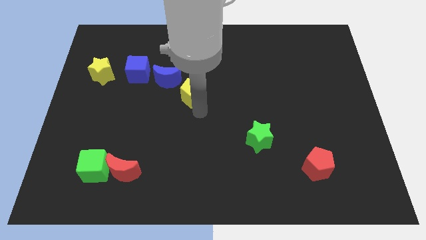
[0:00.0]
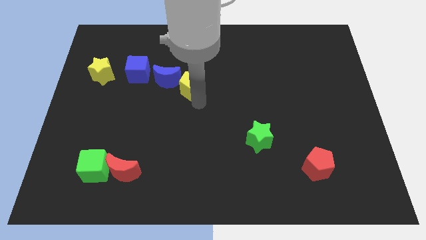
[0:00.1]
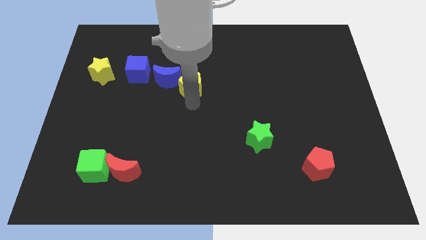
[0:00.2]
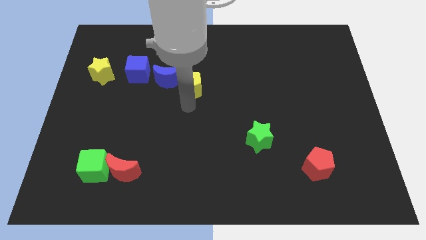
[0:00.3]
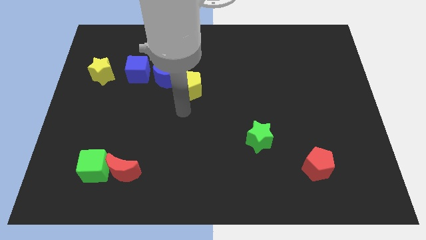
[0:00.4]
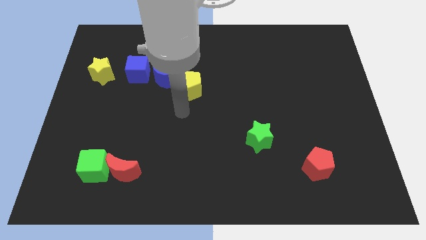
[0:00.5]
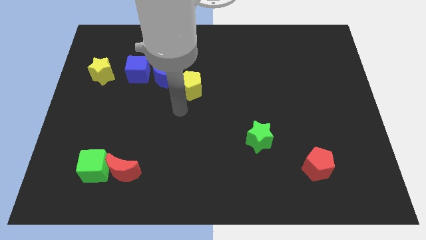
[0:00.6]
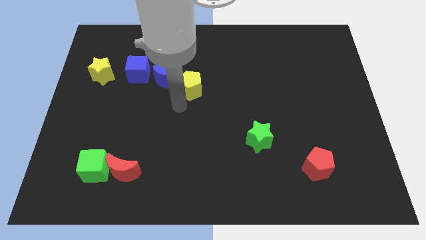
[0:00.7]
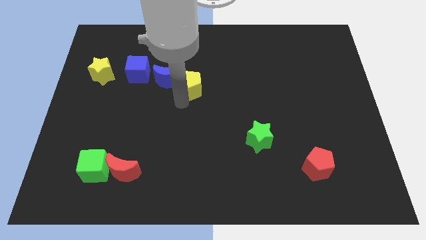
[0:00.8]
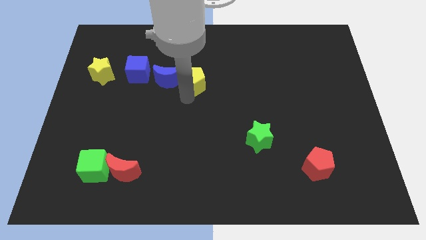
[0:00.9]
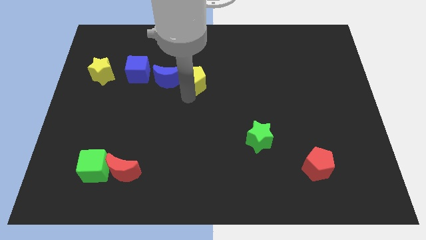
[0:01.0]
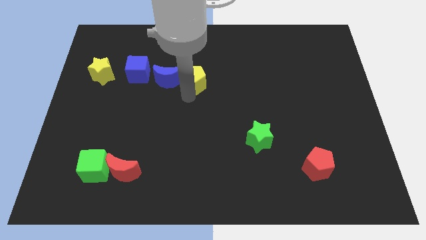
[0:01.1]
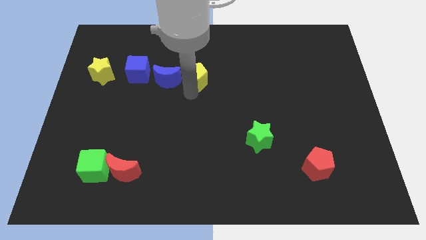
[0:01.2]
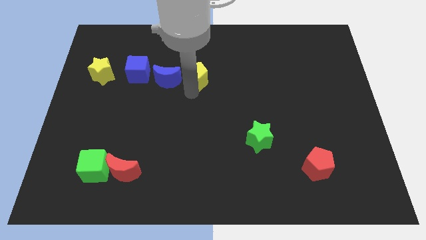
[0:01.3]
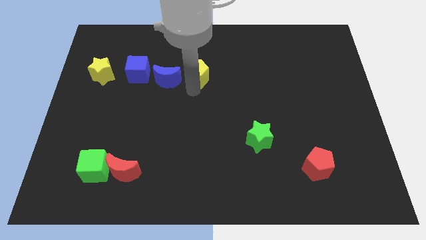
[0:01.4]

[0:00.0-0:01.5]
move the yellow pentagon to the right side of the blue crescent

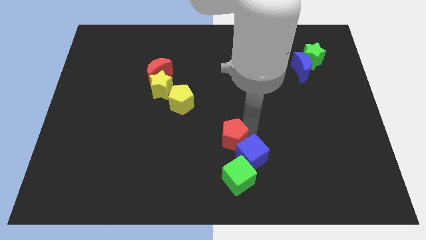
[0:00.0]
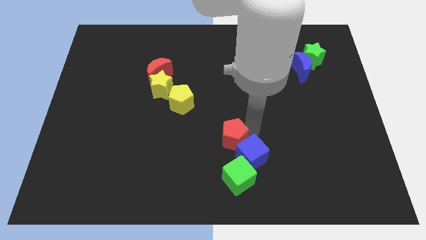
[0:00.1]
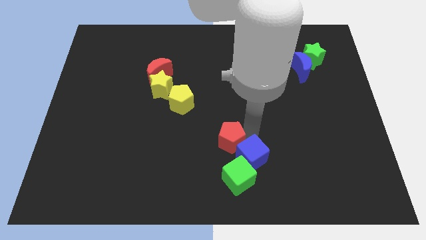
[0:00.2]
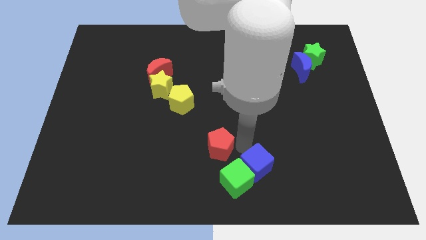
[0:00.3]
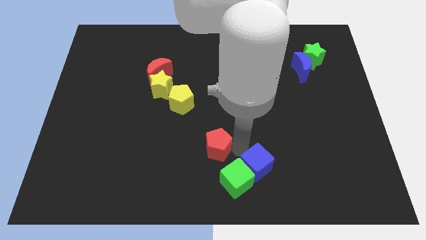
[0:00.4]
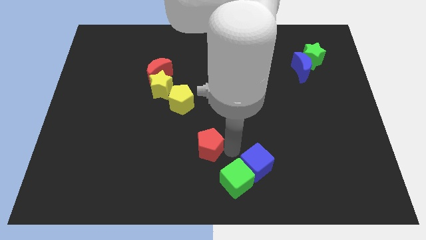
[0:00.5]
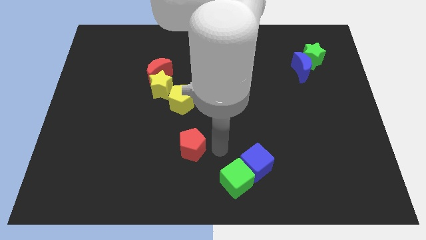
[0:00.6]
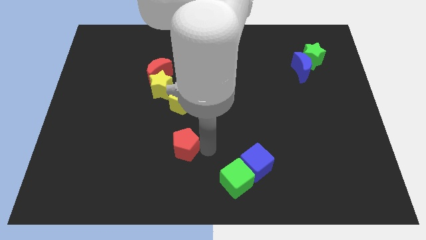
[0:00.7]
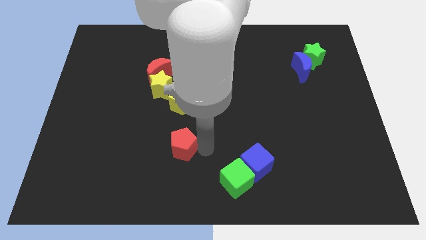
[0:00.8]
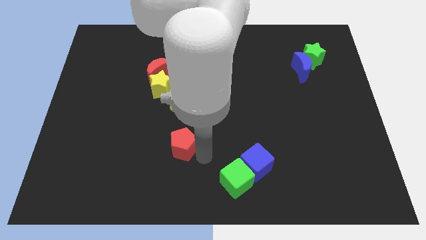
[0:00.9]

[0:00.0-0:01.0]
separate the red pentagon from blue cube

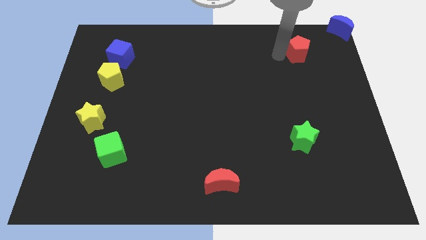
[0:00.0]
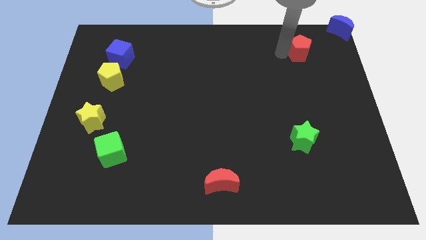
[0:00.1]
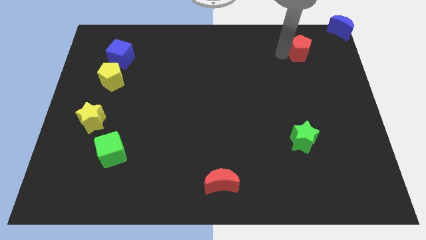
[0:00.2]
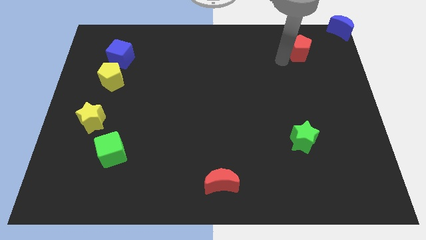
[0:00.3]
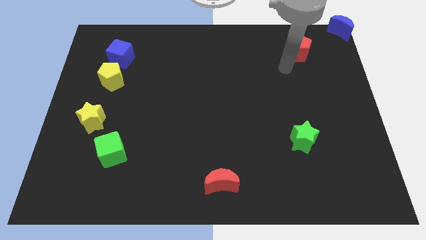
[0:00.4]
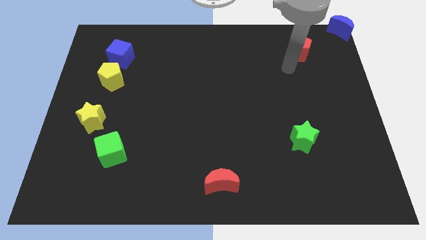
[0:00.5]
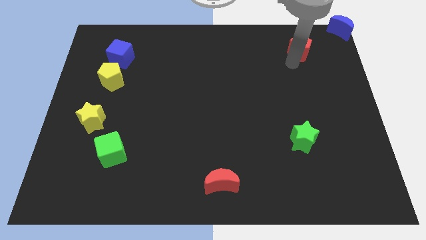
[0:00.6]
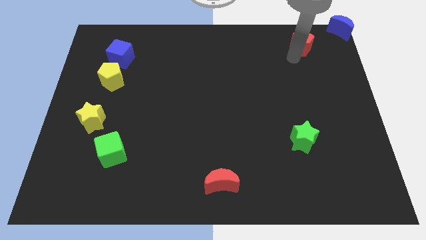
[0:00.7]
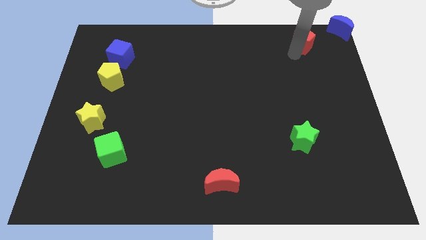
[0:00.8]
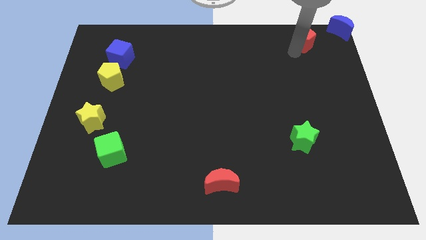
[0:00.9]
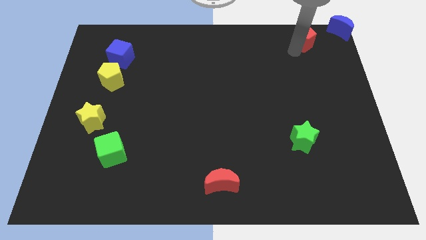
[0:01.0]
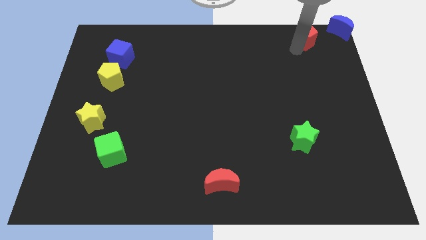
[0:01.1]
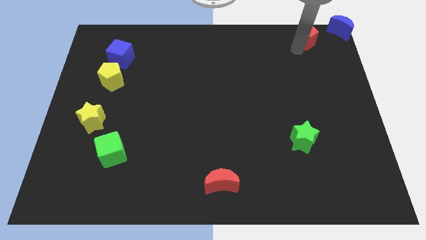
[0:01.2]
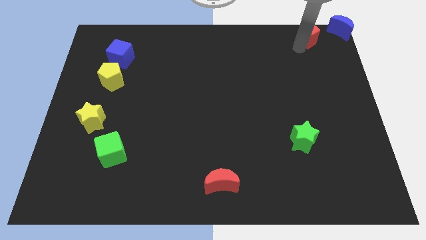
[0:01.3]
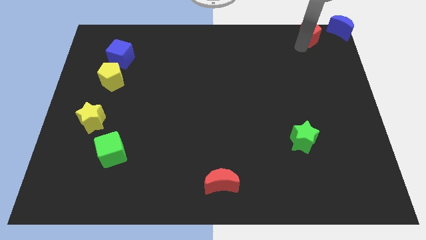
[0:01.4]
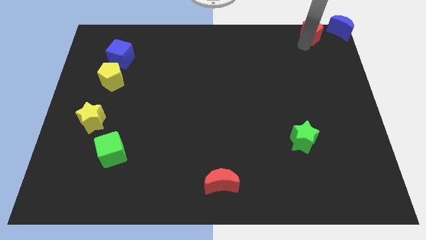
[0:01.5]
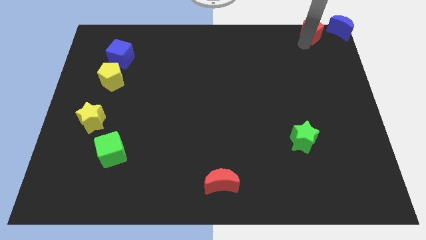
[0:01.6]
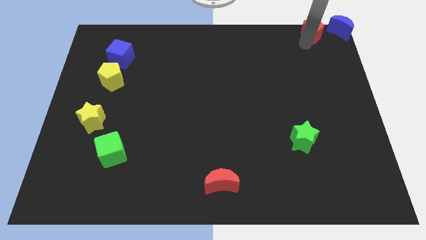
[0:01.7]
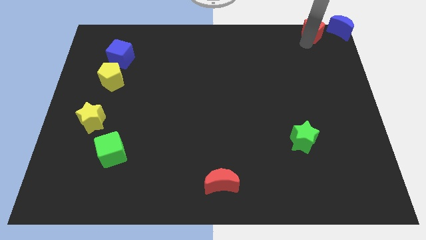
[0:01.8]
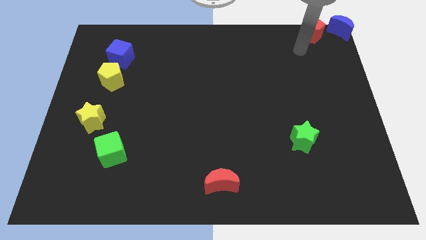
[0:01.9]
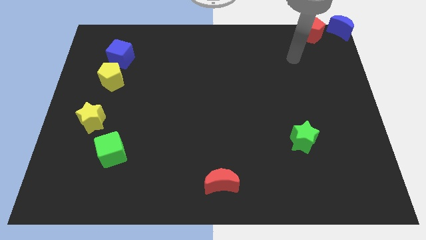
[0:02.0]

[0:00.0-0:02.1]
place the red pentagon to the left of the blue moon

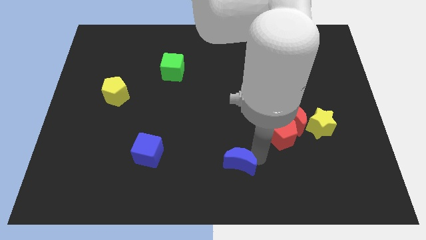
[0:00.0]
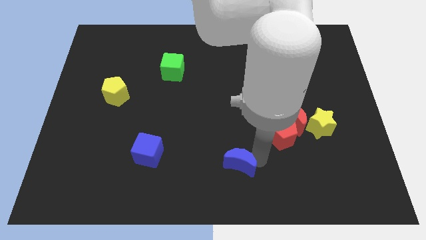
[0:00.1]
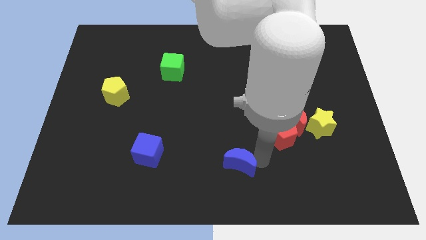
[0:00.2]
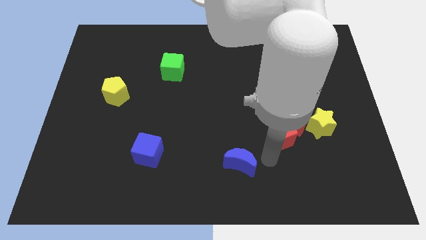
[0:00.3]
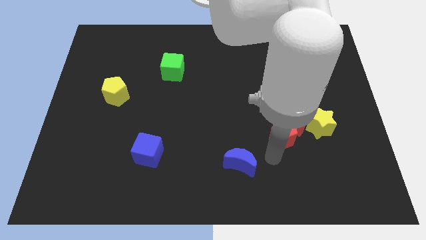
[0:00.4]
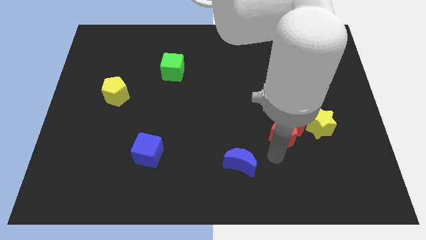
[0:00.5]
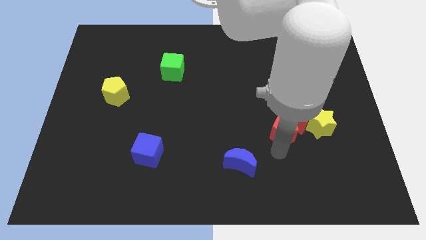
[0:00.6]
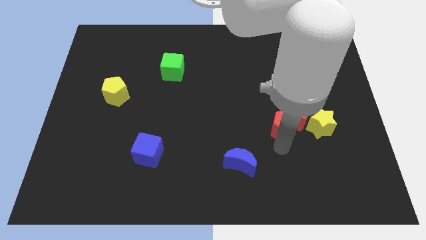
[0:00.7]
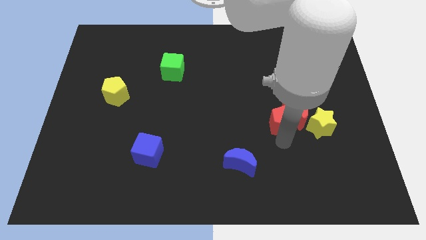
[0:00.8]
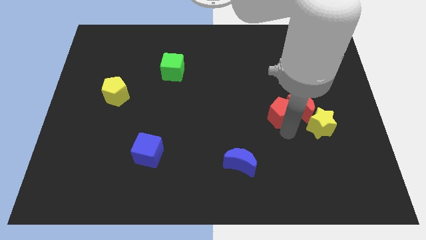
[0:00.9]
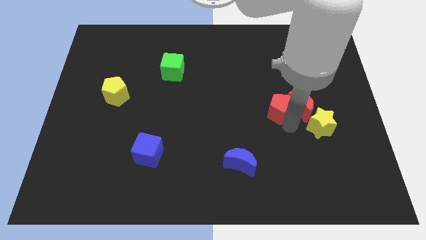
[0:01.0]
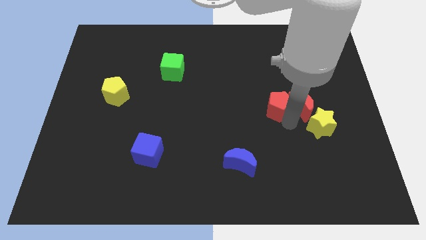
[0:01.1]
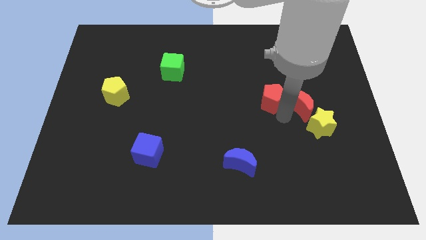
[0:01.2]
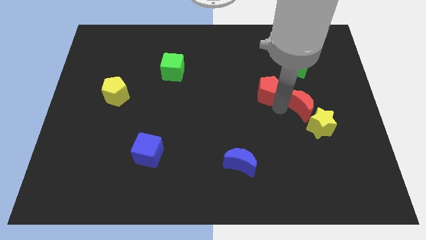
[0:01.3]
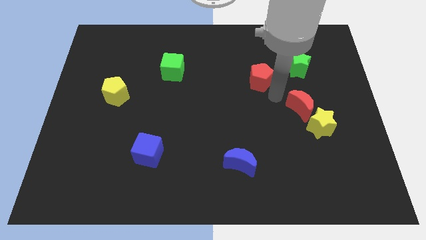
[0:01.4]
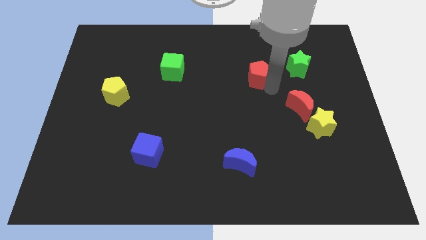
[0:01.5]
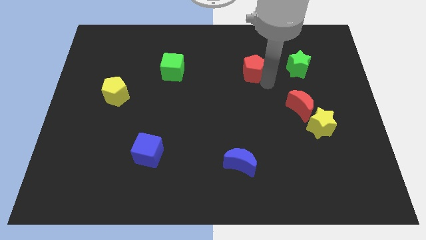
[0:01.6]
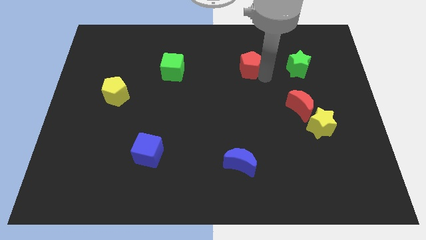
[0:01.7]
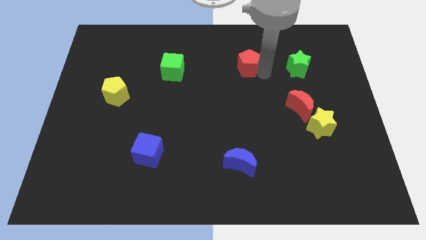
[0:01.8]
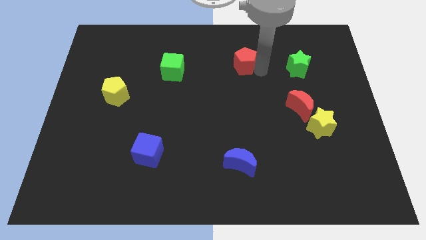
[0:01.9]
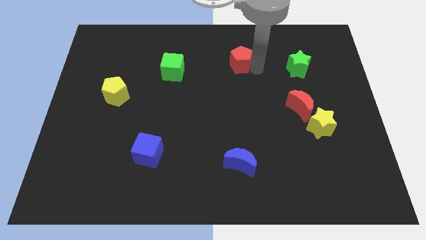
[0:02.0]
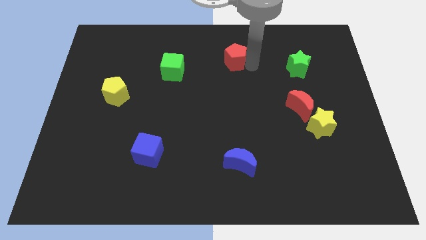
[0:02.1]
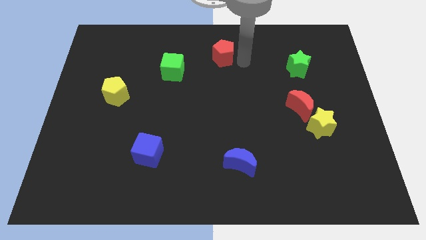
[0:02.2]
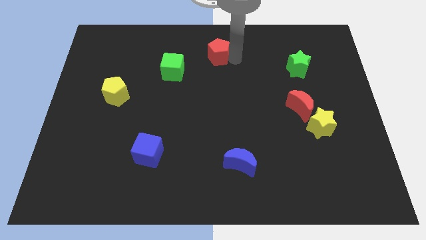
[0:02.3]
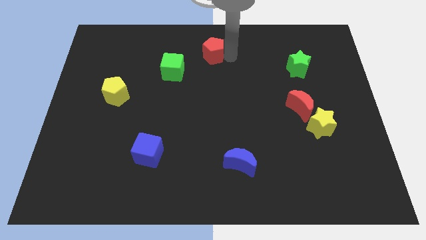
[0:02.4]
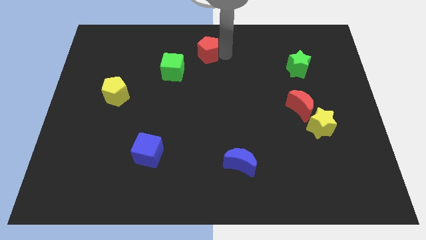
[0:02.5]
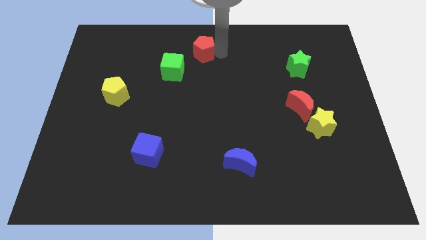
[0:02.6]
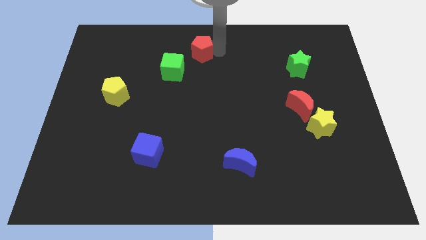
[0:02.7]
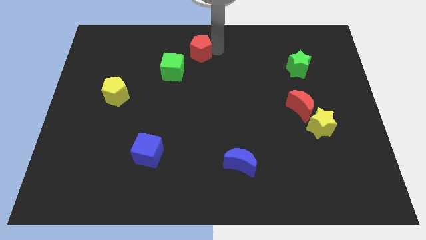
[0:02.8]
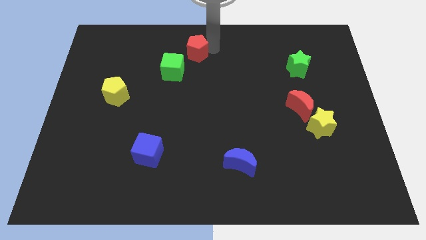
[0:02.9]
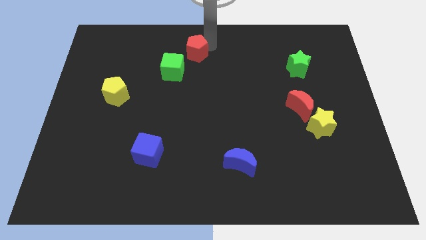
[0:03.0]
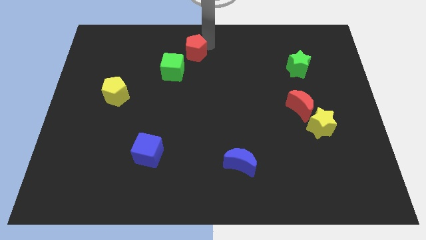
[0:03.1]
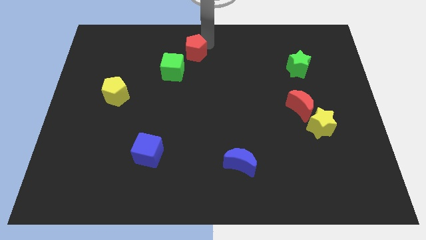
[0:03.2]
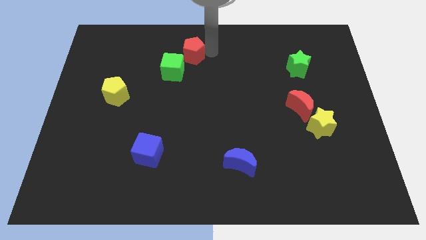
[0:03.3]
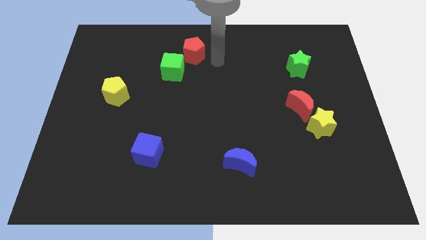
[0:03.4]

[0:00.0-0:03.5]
place the red pentagon to the right top of the green cube

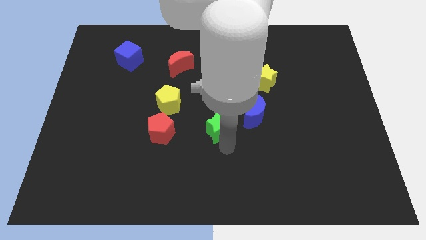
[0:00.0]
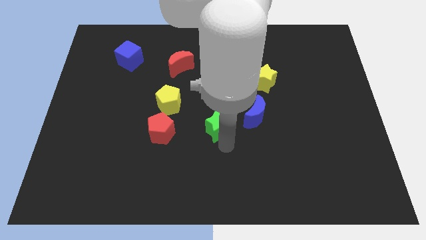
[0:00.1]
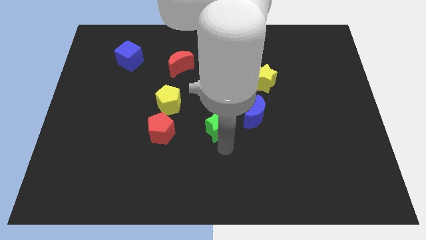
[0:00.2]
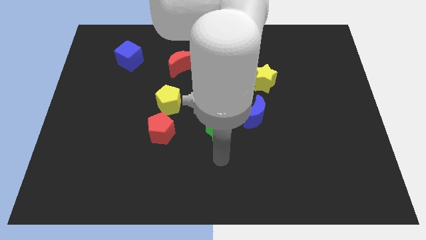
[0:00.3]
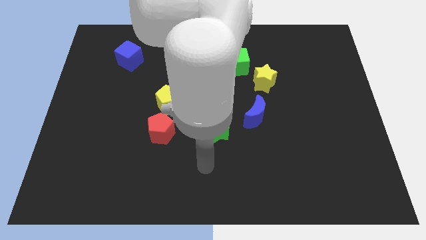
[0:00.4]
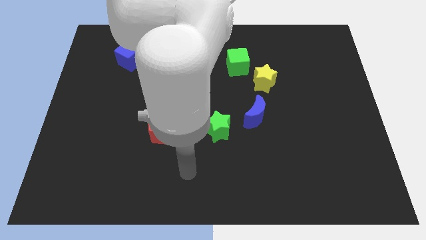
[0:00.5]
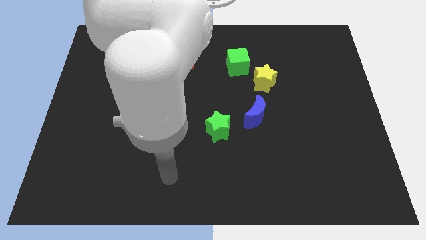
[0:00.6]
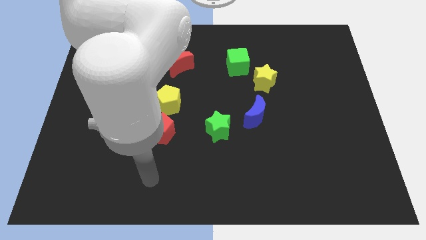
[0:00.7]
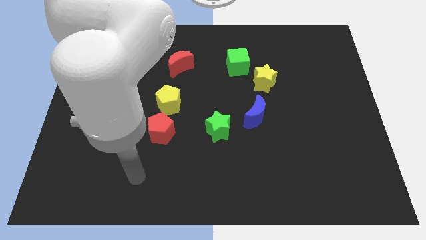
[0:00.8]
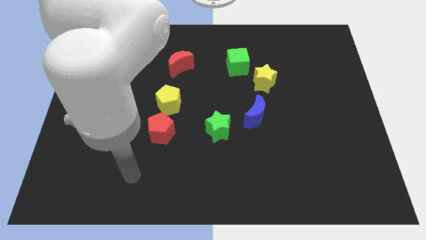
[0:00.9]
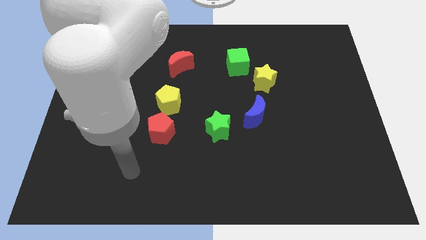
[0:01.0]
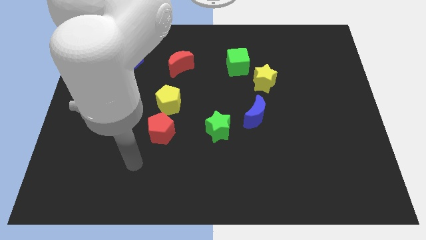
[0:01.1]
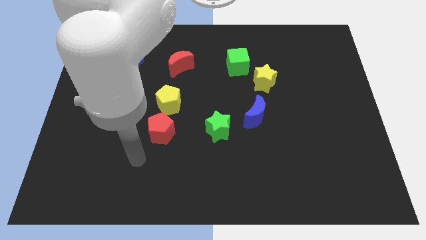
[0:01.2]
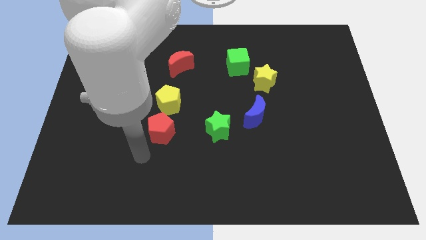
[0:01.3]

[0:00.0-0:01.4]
move your arm below the red pentagon
